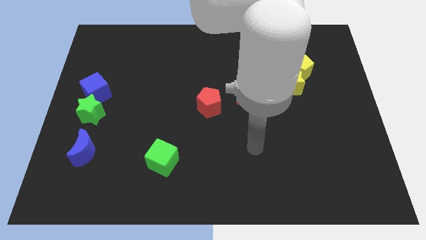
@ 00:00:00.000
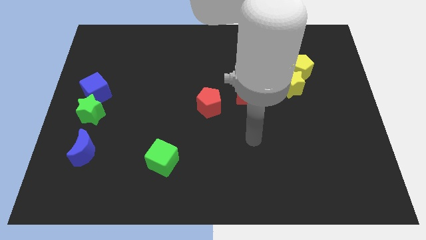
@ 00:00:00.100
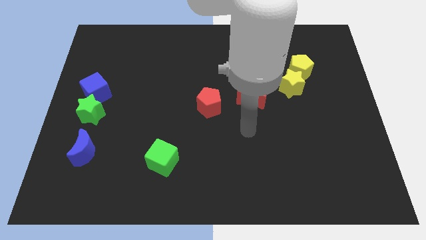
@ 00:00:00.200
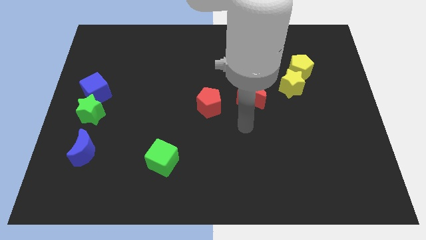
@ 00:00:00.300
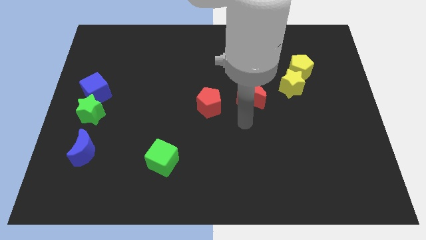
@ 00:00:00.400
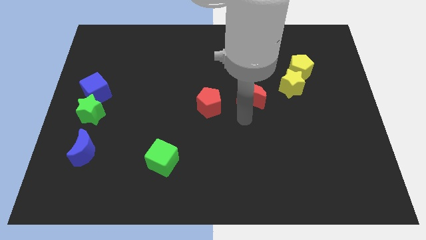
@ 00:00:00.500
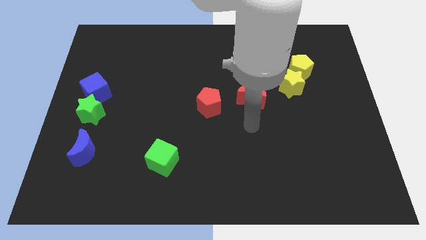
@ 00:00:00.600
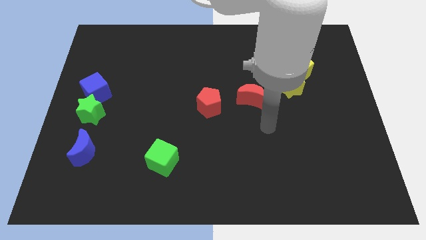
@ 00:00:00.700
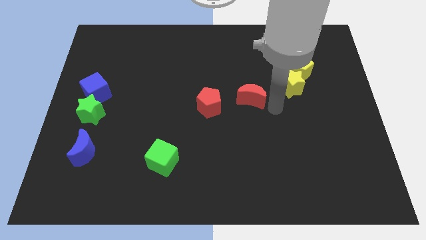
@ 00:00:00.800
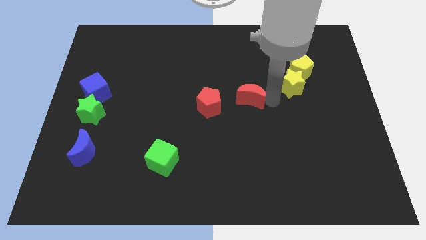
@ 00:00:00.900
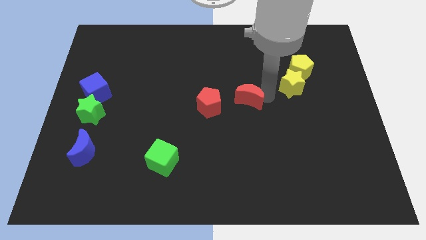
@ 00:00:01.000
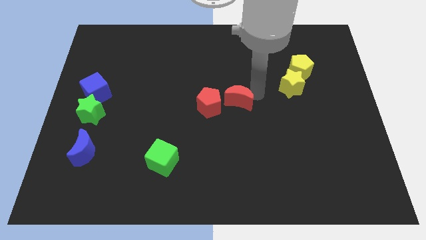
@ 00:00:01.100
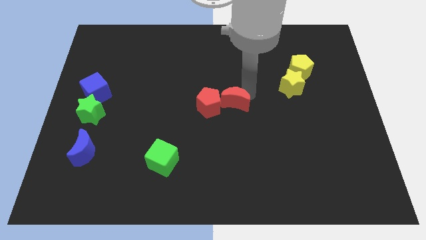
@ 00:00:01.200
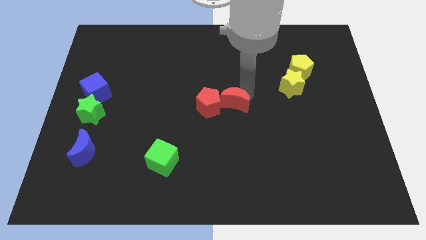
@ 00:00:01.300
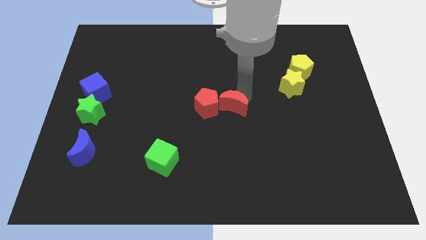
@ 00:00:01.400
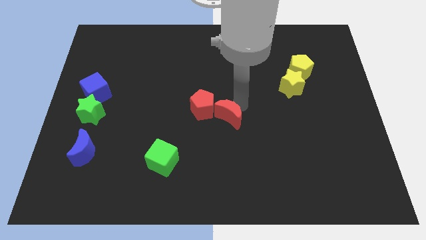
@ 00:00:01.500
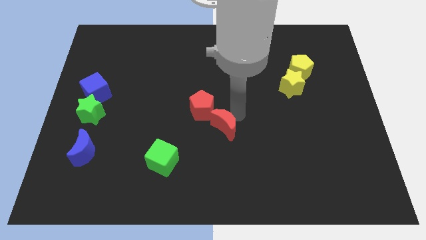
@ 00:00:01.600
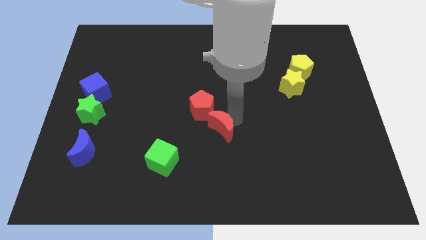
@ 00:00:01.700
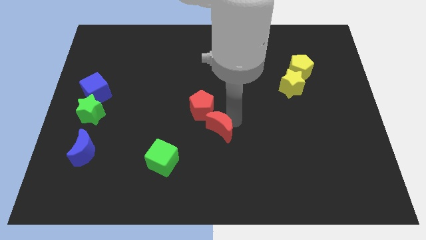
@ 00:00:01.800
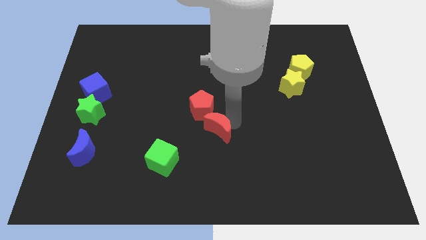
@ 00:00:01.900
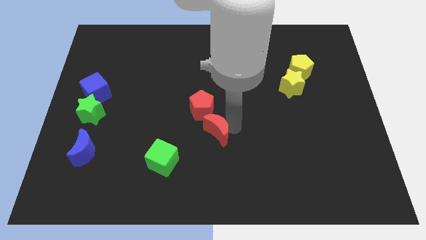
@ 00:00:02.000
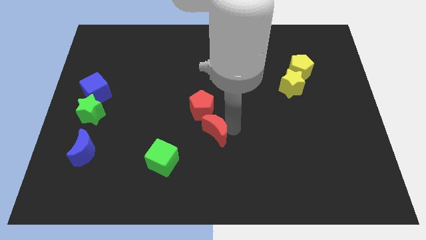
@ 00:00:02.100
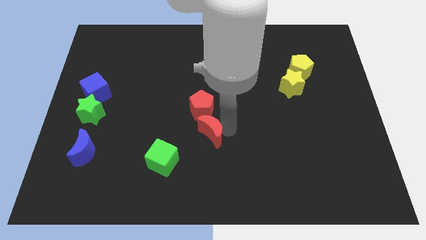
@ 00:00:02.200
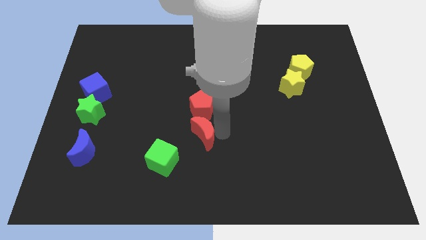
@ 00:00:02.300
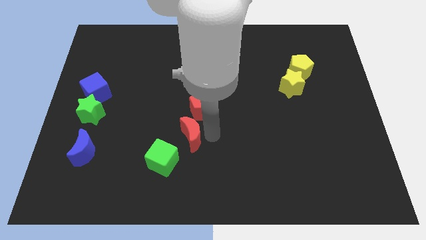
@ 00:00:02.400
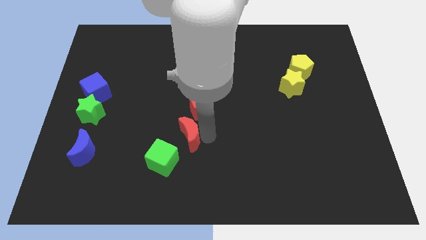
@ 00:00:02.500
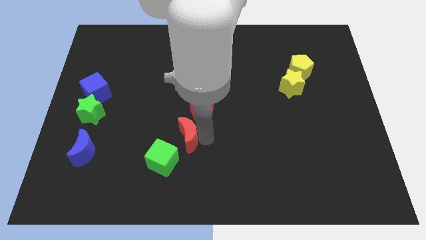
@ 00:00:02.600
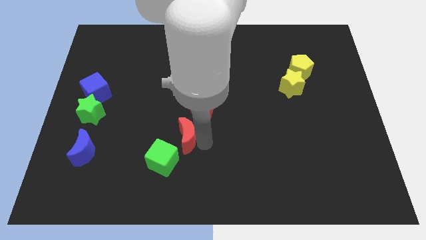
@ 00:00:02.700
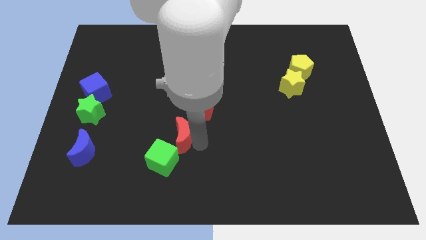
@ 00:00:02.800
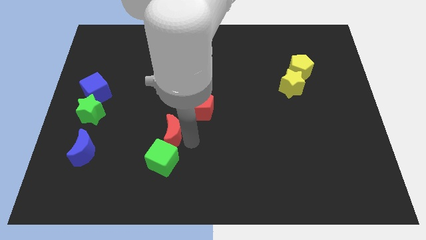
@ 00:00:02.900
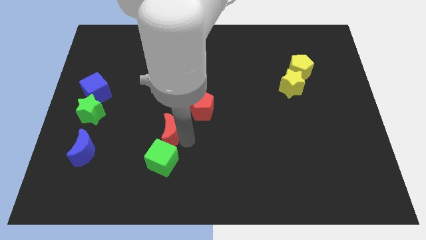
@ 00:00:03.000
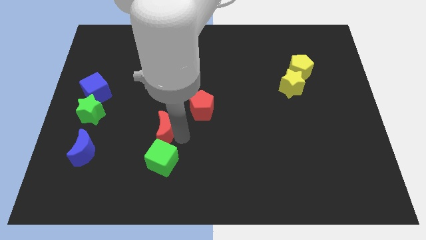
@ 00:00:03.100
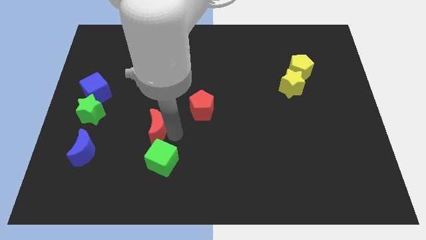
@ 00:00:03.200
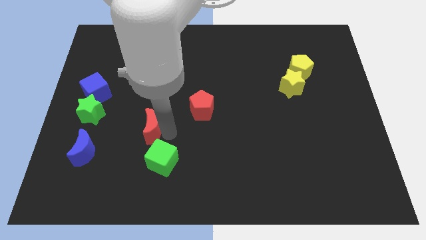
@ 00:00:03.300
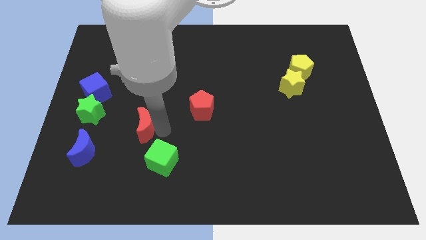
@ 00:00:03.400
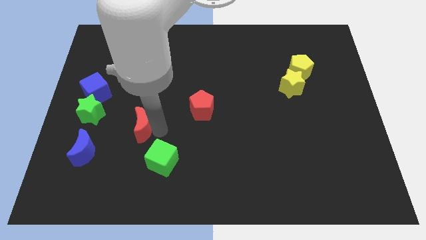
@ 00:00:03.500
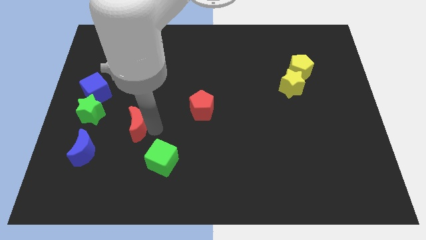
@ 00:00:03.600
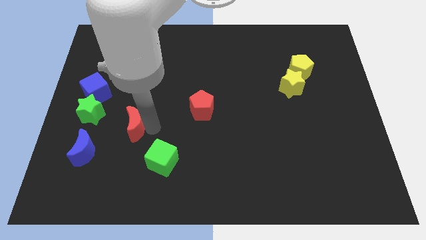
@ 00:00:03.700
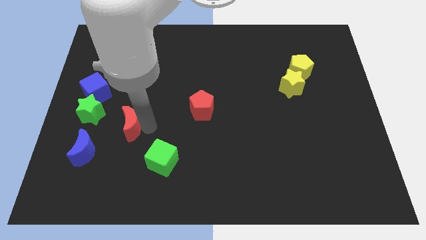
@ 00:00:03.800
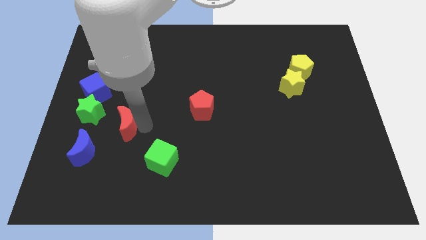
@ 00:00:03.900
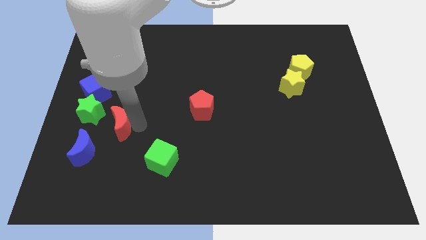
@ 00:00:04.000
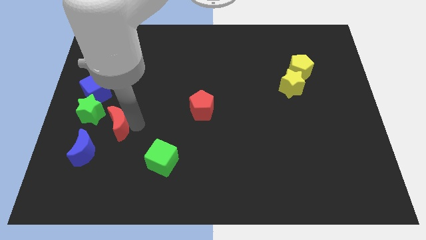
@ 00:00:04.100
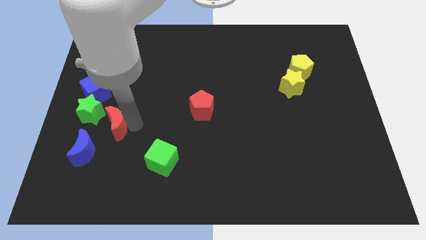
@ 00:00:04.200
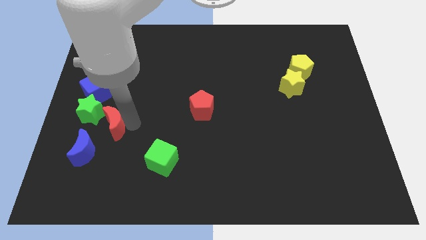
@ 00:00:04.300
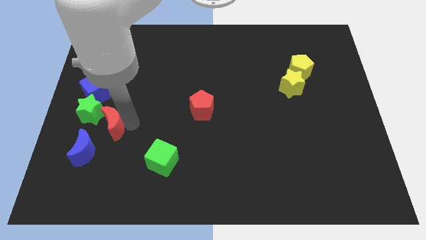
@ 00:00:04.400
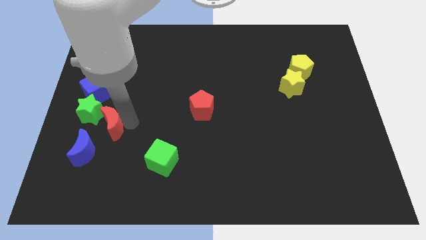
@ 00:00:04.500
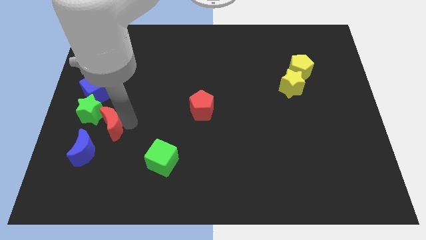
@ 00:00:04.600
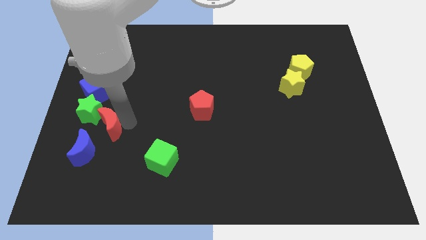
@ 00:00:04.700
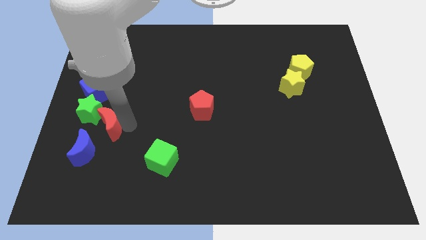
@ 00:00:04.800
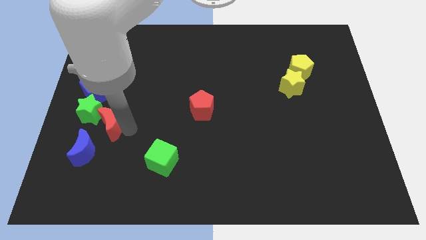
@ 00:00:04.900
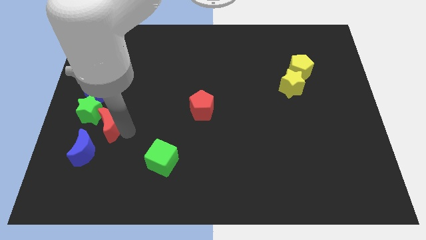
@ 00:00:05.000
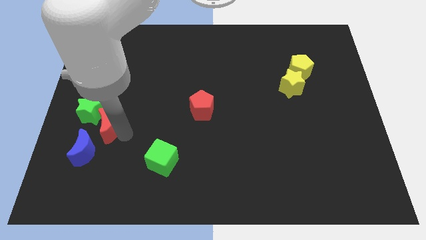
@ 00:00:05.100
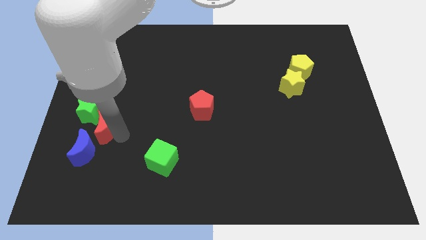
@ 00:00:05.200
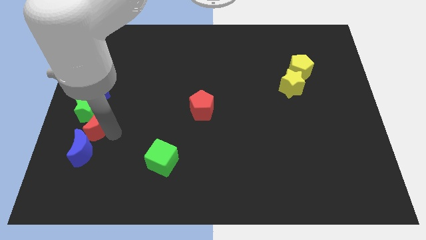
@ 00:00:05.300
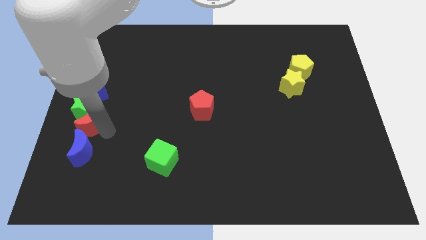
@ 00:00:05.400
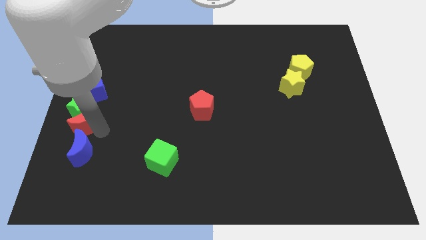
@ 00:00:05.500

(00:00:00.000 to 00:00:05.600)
push the red moon to the green star

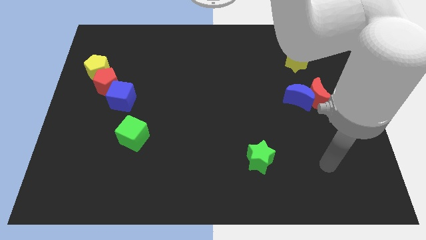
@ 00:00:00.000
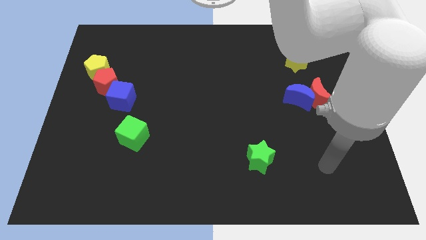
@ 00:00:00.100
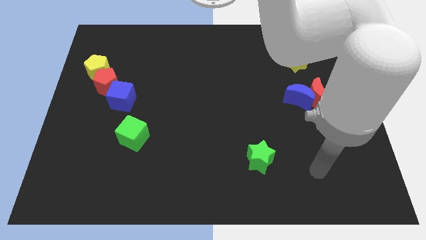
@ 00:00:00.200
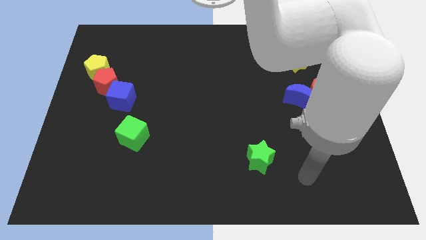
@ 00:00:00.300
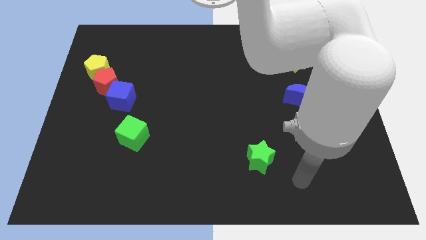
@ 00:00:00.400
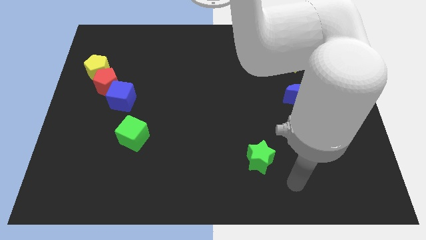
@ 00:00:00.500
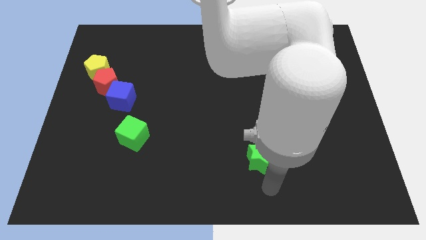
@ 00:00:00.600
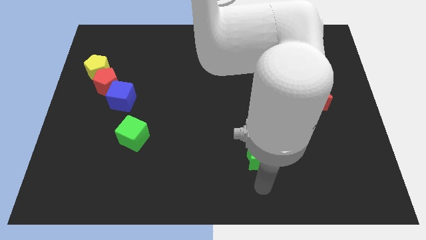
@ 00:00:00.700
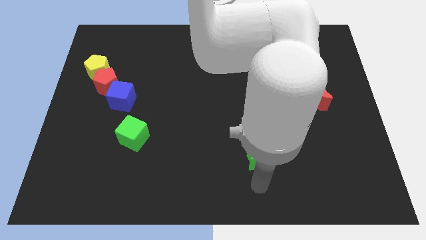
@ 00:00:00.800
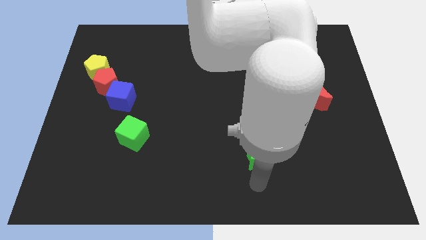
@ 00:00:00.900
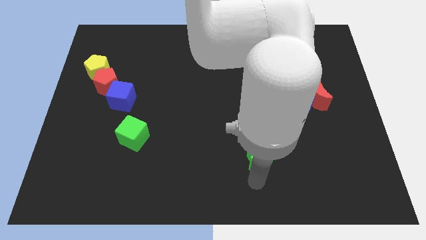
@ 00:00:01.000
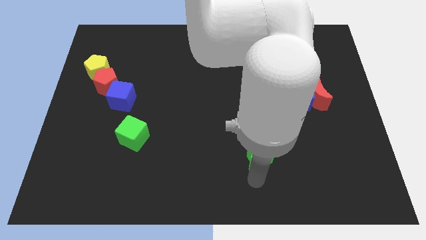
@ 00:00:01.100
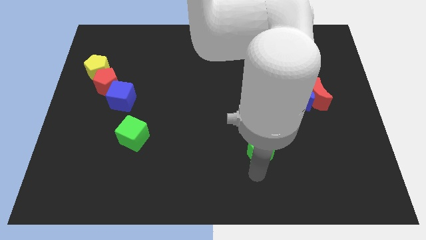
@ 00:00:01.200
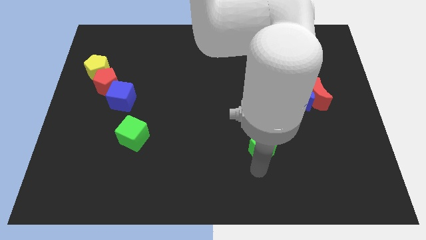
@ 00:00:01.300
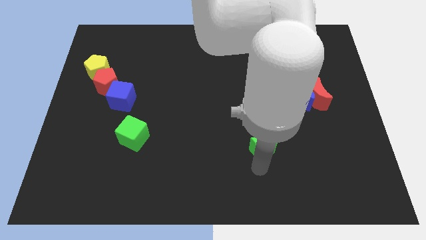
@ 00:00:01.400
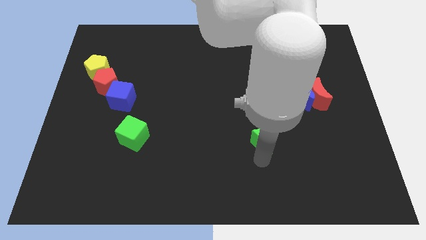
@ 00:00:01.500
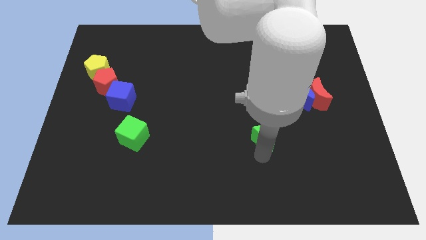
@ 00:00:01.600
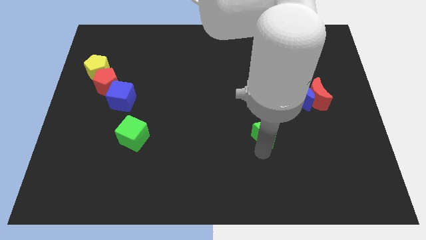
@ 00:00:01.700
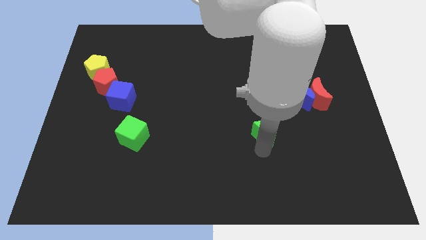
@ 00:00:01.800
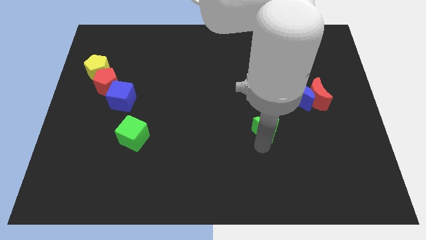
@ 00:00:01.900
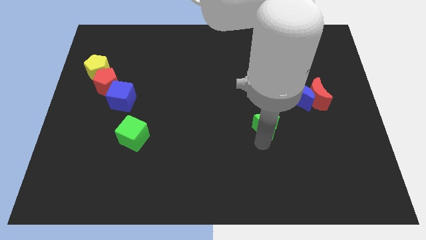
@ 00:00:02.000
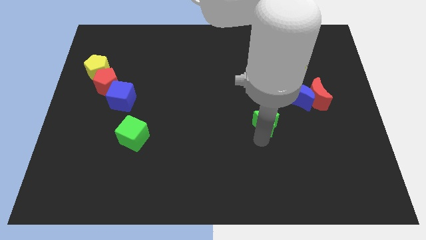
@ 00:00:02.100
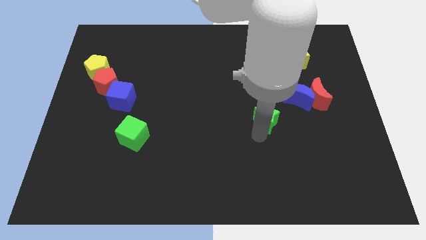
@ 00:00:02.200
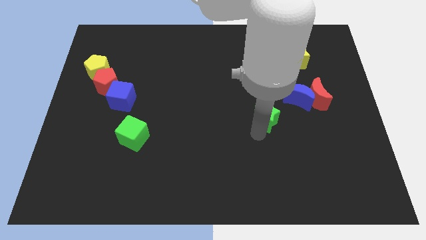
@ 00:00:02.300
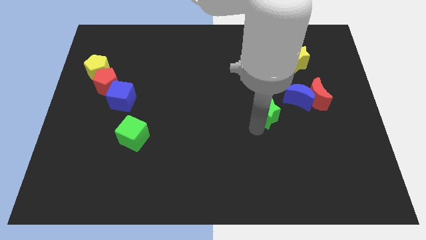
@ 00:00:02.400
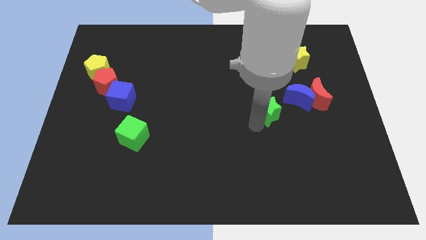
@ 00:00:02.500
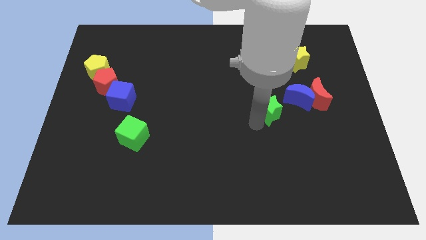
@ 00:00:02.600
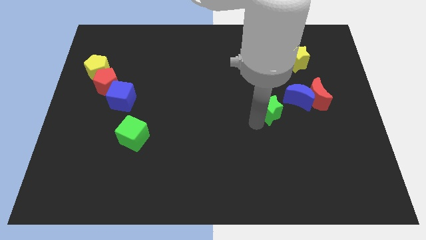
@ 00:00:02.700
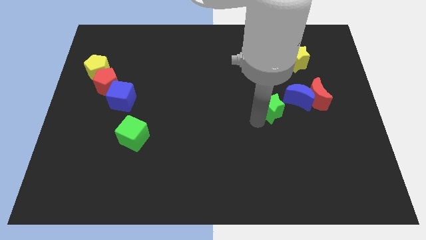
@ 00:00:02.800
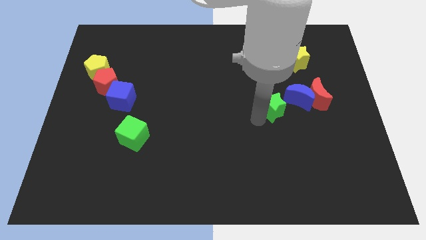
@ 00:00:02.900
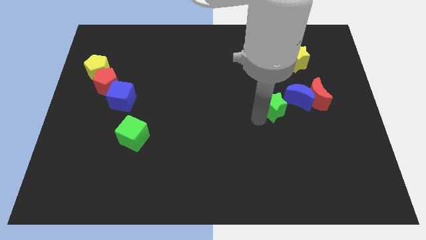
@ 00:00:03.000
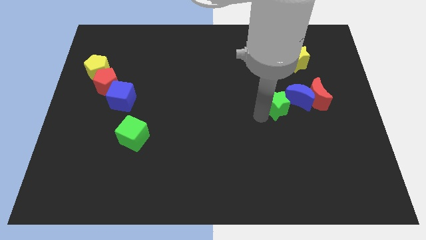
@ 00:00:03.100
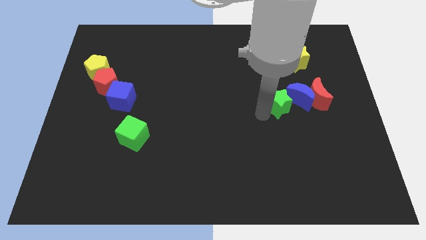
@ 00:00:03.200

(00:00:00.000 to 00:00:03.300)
slide the green star close to the blue moon
